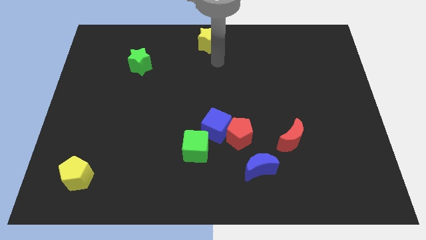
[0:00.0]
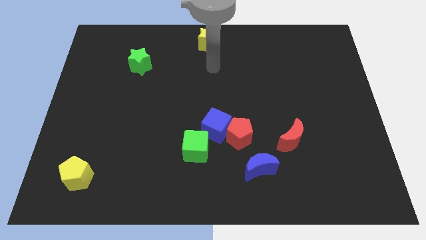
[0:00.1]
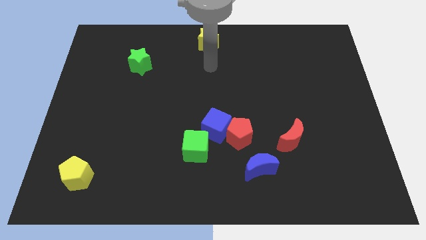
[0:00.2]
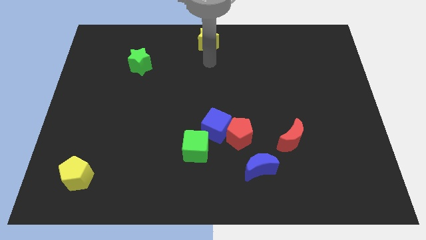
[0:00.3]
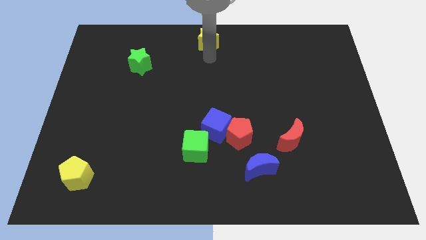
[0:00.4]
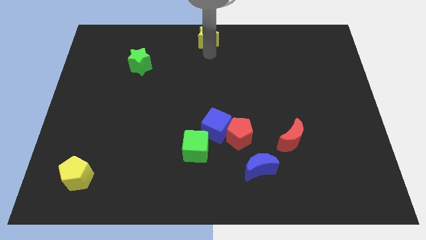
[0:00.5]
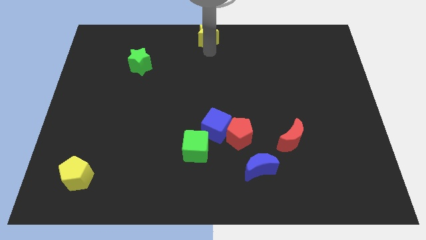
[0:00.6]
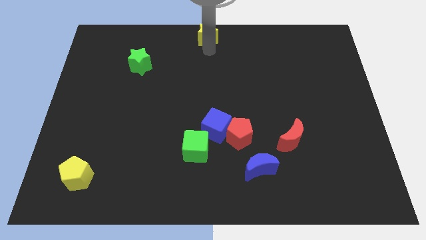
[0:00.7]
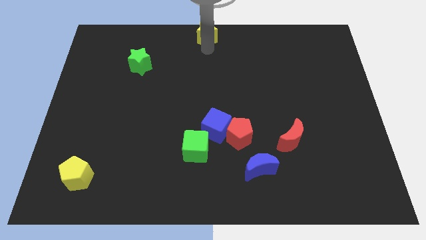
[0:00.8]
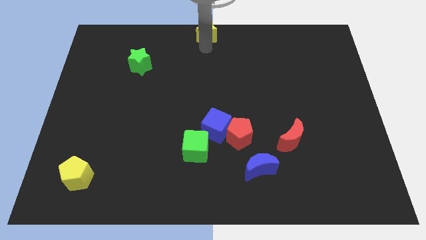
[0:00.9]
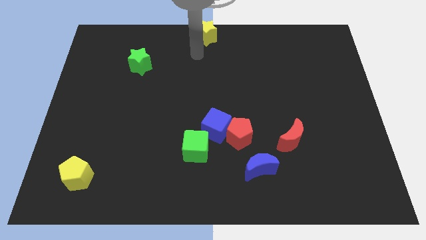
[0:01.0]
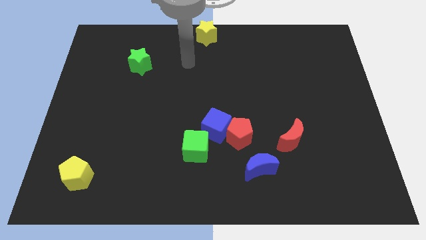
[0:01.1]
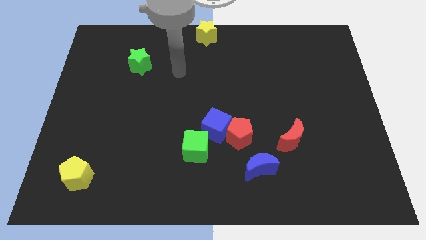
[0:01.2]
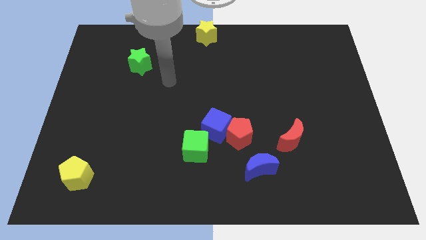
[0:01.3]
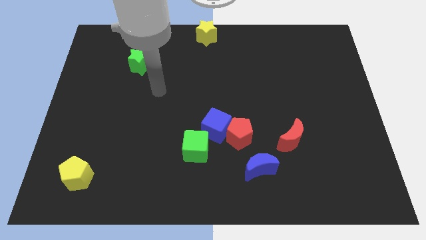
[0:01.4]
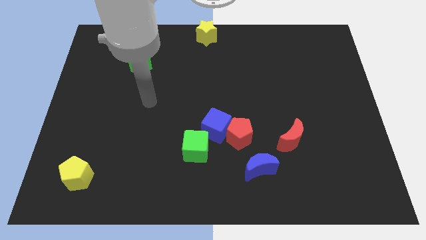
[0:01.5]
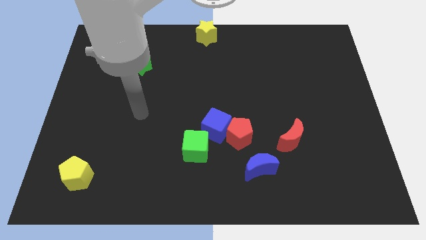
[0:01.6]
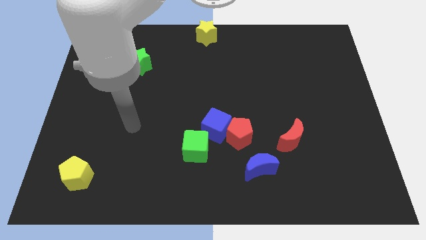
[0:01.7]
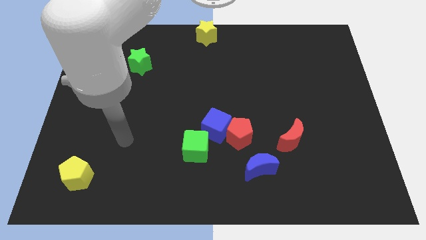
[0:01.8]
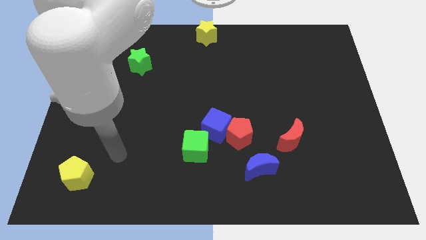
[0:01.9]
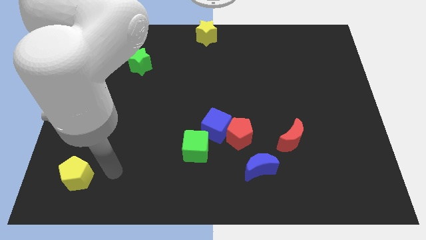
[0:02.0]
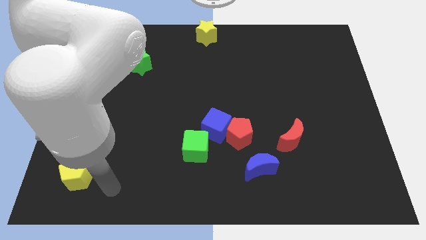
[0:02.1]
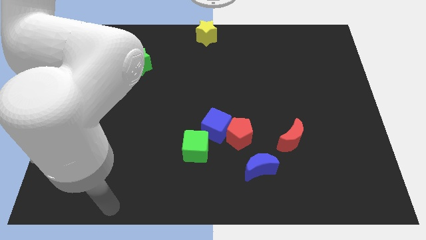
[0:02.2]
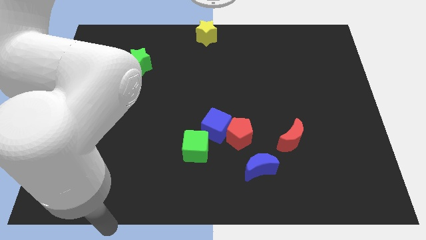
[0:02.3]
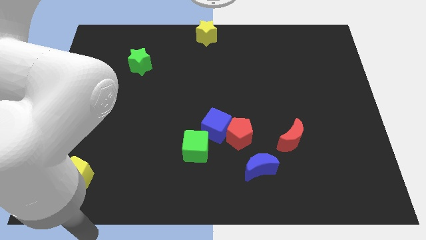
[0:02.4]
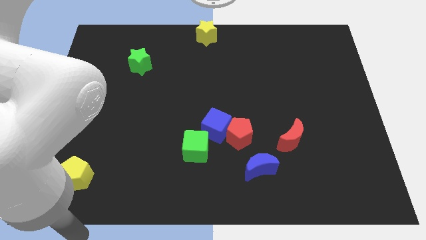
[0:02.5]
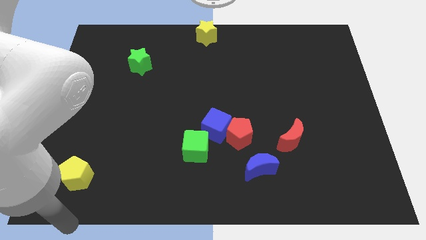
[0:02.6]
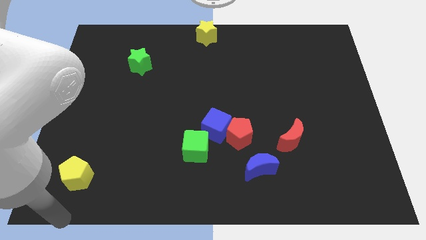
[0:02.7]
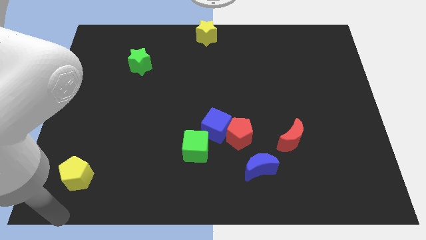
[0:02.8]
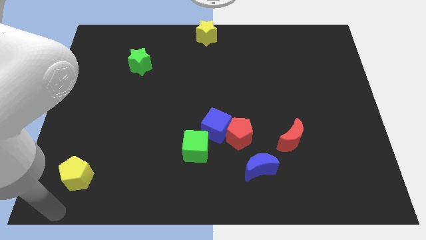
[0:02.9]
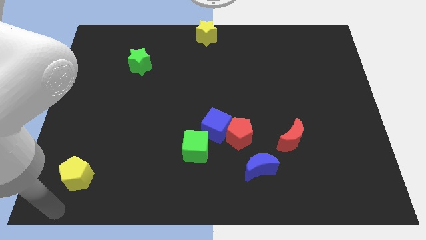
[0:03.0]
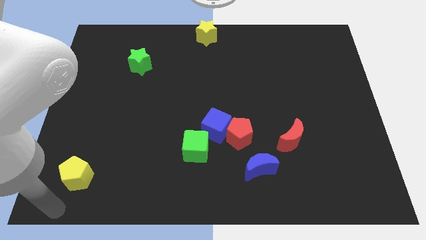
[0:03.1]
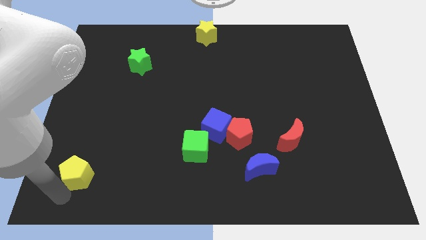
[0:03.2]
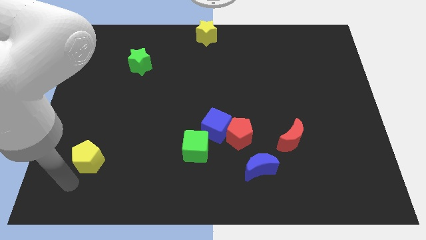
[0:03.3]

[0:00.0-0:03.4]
place the yellow pentagon towards center

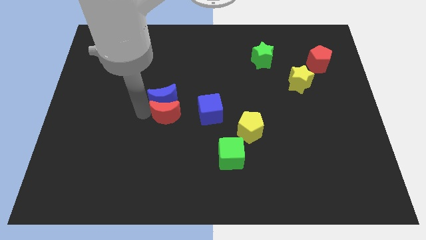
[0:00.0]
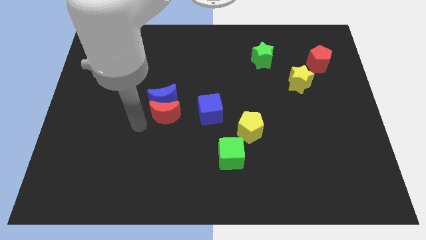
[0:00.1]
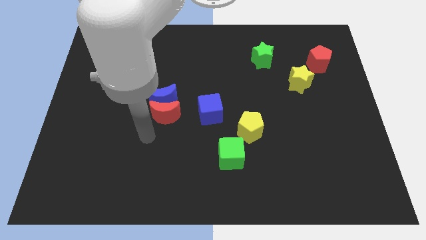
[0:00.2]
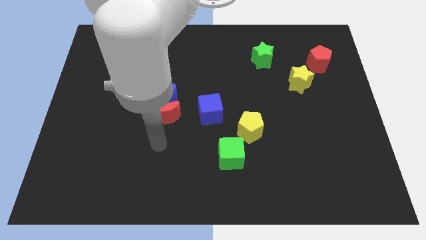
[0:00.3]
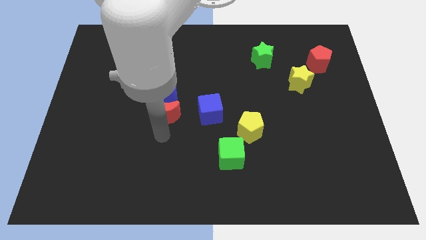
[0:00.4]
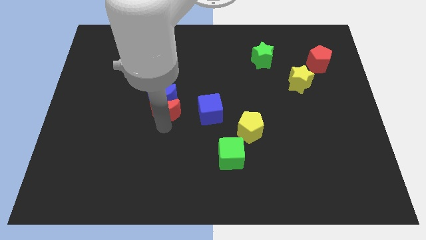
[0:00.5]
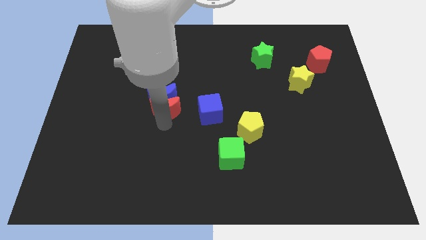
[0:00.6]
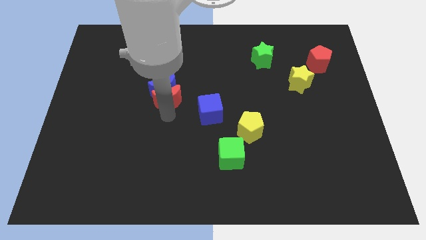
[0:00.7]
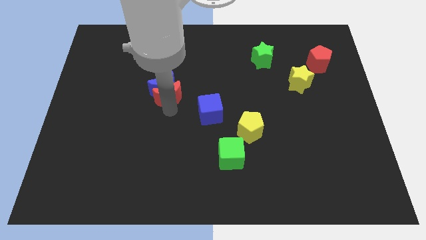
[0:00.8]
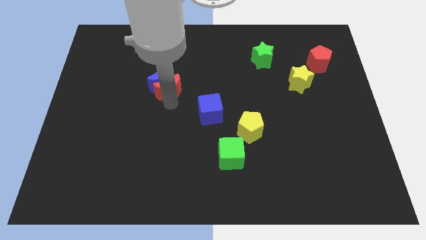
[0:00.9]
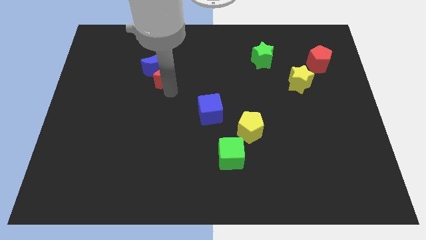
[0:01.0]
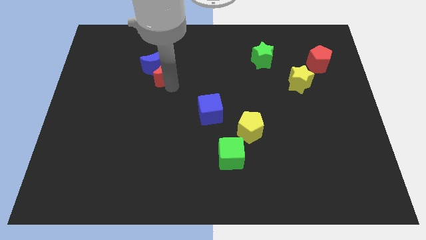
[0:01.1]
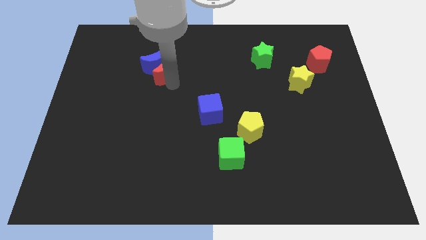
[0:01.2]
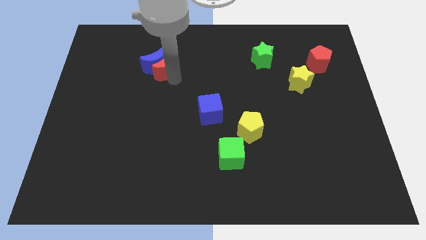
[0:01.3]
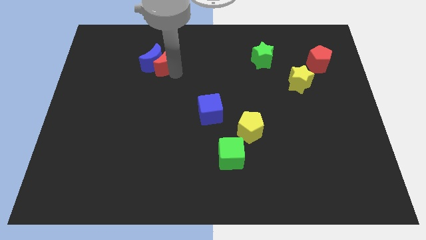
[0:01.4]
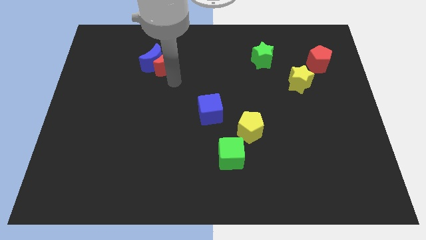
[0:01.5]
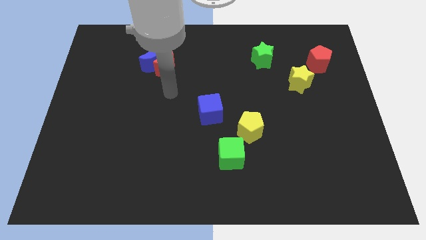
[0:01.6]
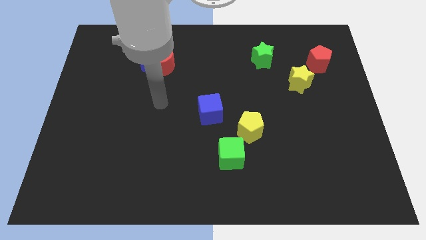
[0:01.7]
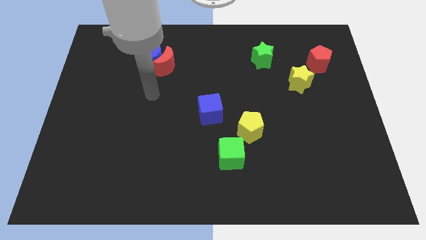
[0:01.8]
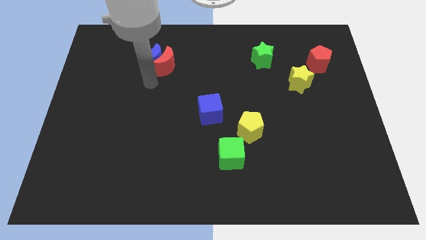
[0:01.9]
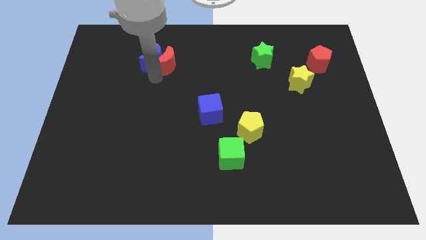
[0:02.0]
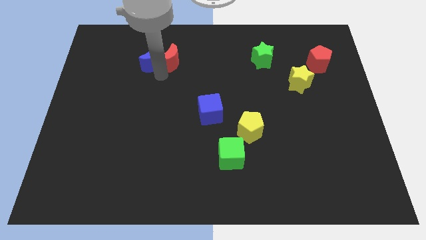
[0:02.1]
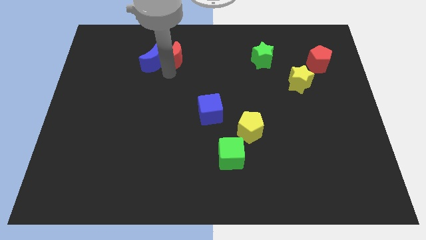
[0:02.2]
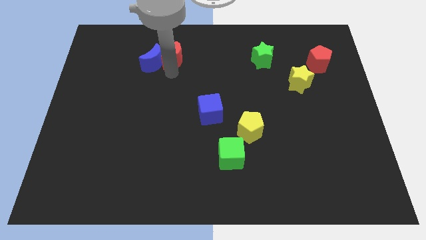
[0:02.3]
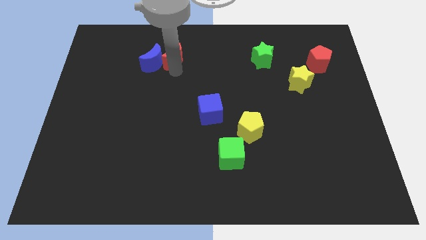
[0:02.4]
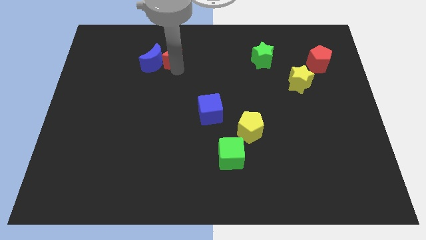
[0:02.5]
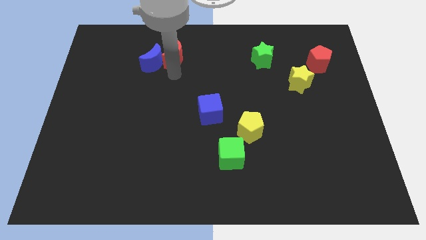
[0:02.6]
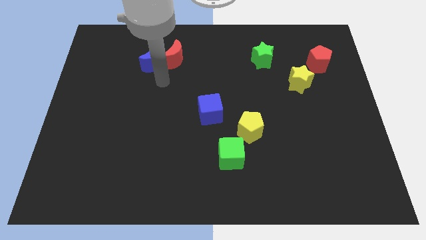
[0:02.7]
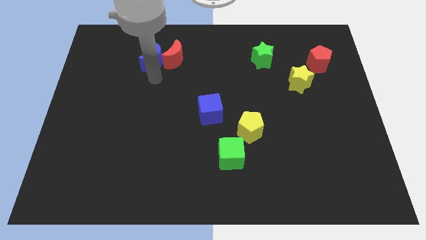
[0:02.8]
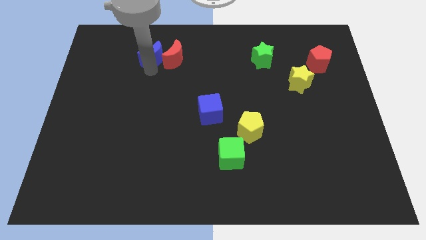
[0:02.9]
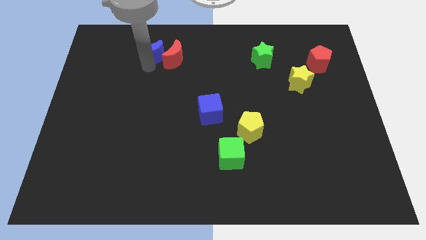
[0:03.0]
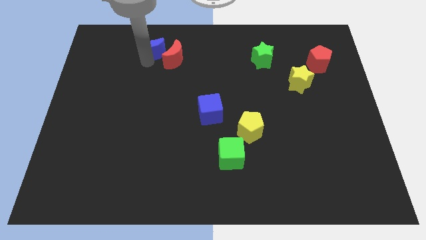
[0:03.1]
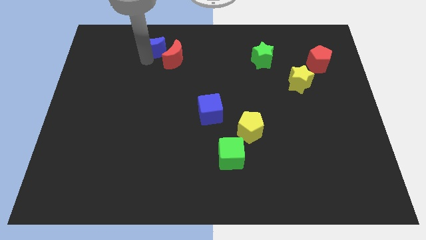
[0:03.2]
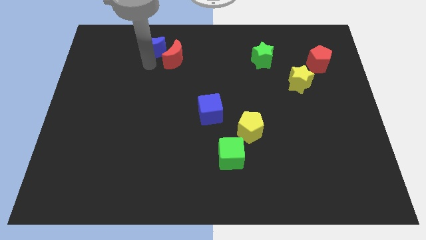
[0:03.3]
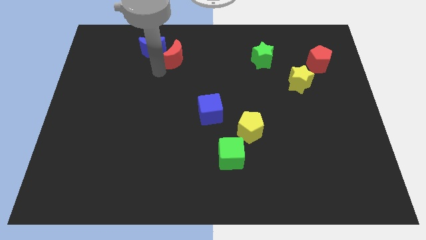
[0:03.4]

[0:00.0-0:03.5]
move red crescent and blue crescent to the left top

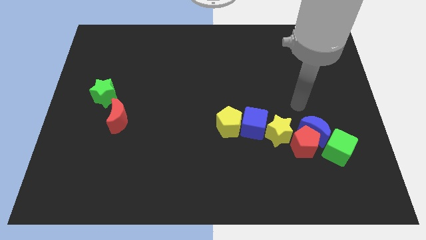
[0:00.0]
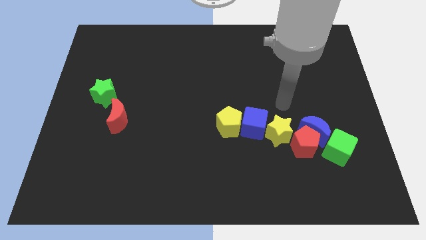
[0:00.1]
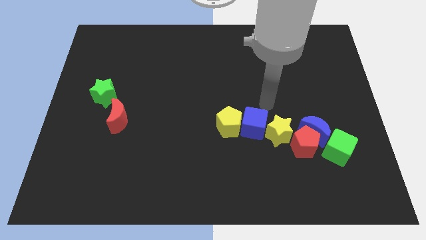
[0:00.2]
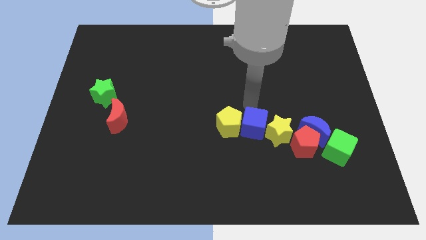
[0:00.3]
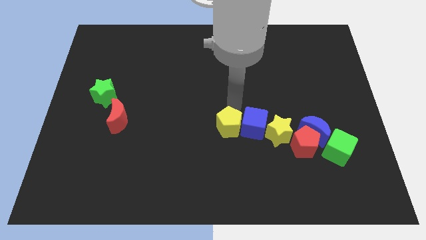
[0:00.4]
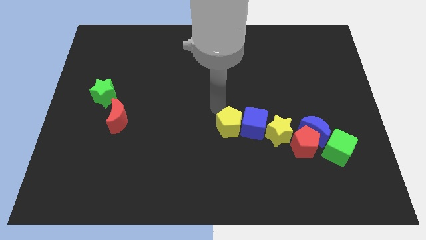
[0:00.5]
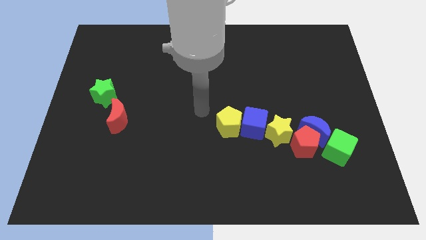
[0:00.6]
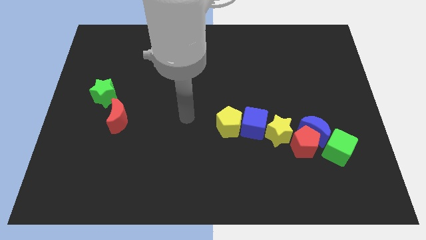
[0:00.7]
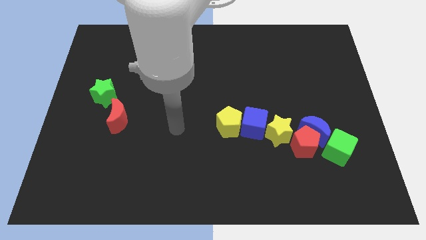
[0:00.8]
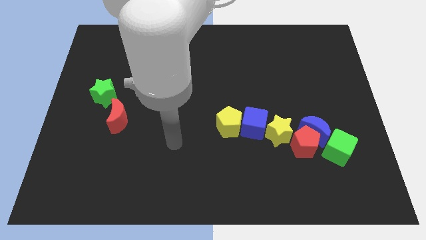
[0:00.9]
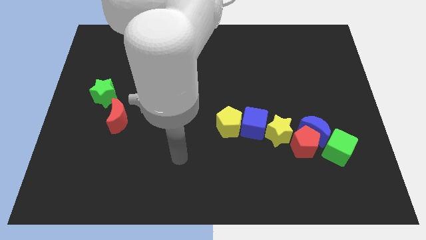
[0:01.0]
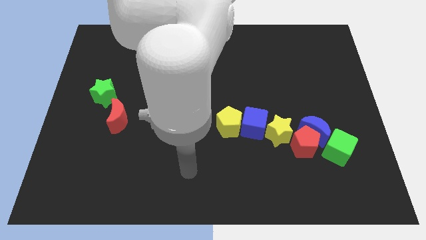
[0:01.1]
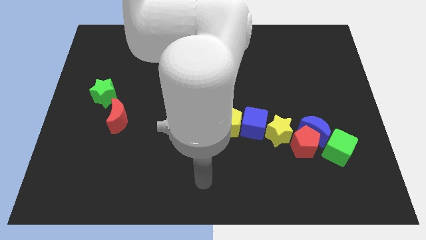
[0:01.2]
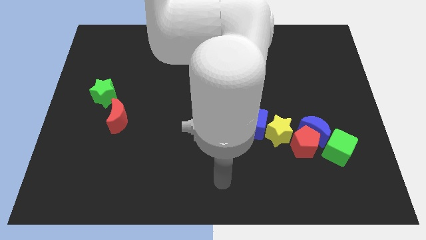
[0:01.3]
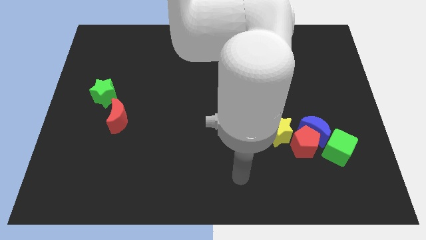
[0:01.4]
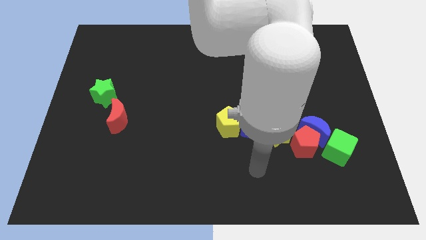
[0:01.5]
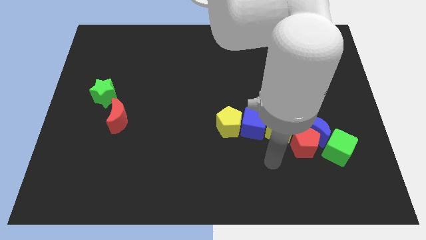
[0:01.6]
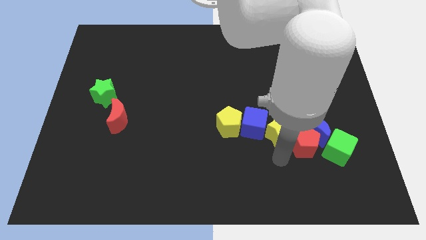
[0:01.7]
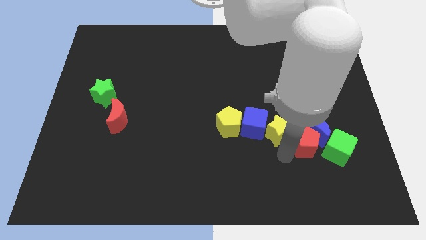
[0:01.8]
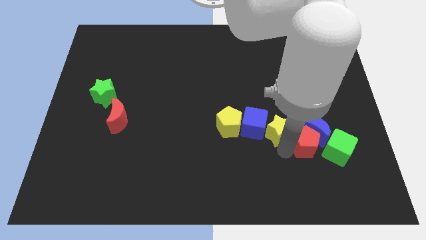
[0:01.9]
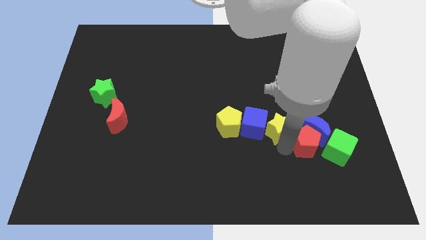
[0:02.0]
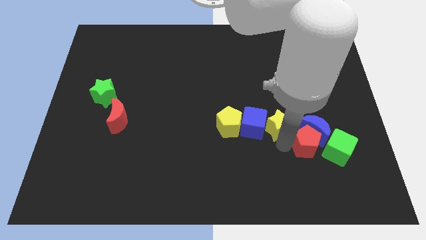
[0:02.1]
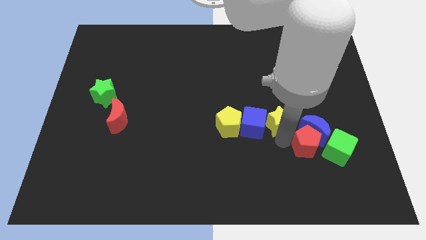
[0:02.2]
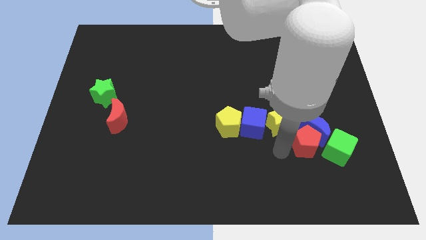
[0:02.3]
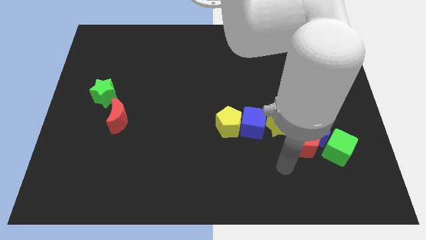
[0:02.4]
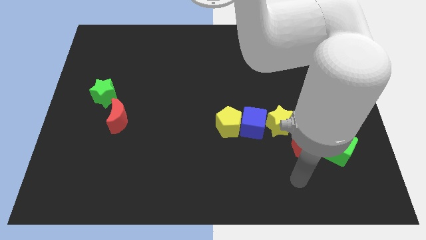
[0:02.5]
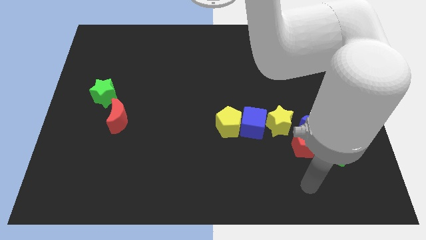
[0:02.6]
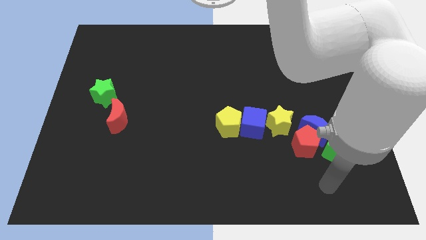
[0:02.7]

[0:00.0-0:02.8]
push yellow star slightly towards upward
